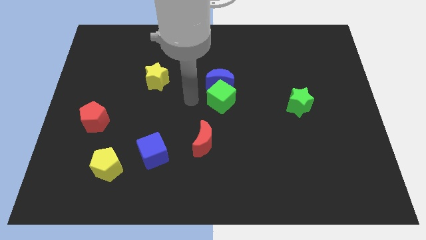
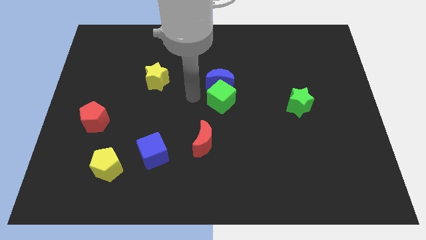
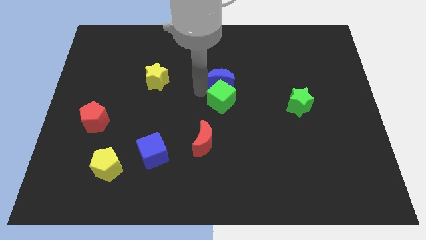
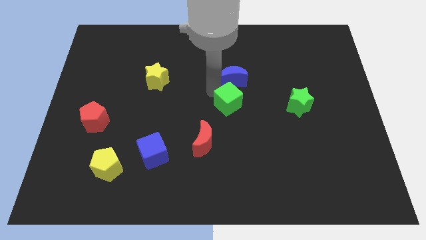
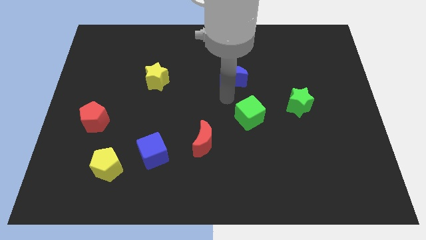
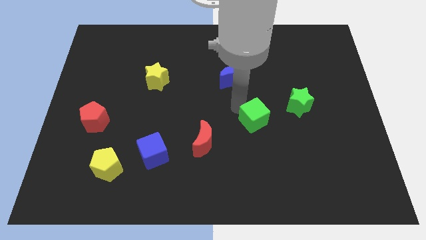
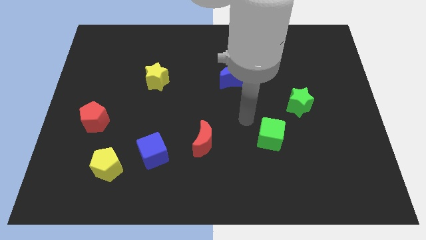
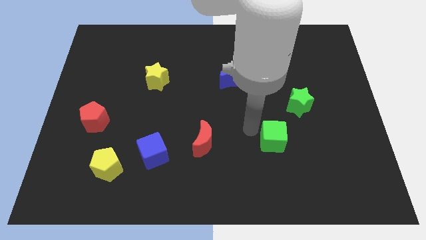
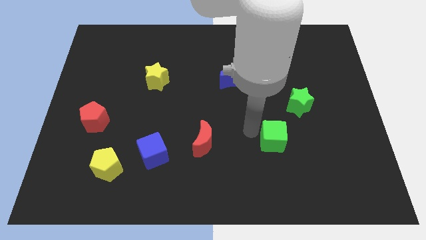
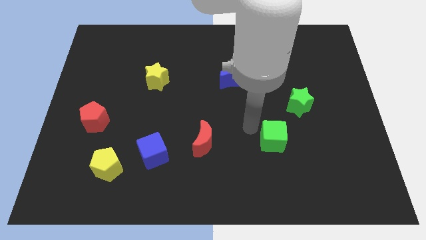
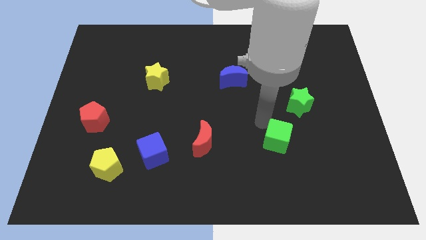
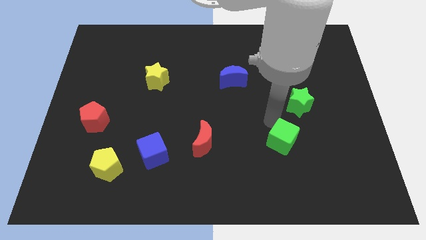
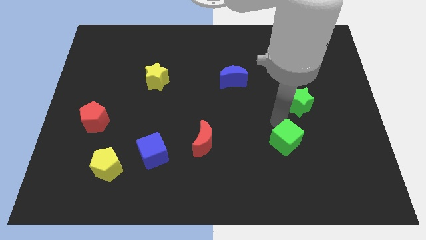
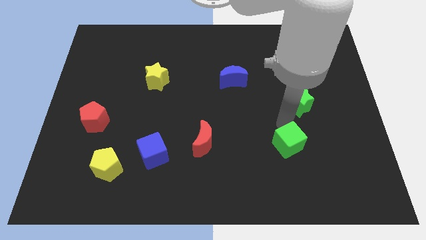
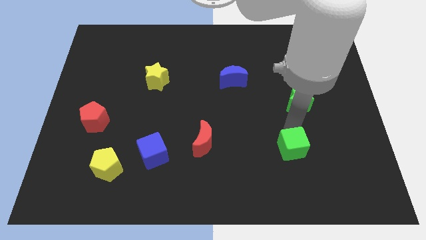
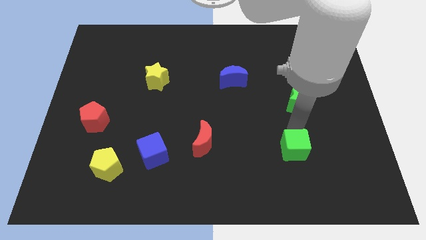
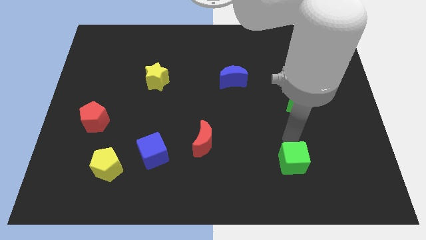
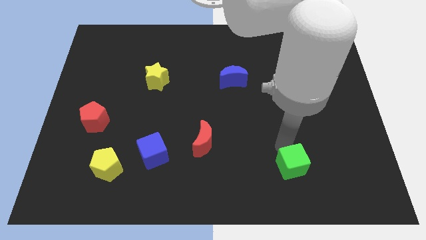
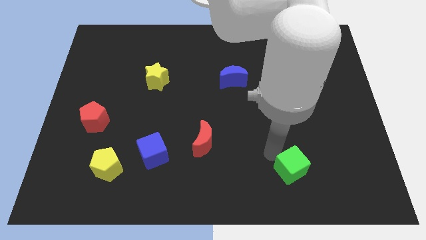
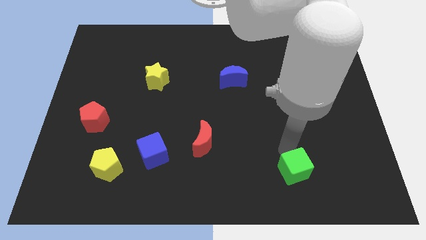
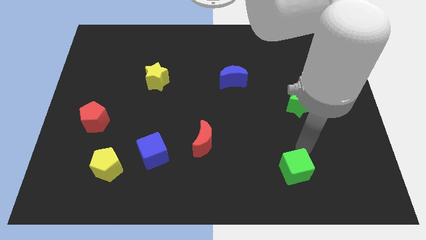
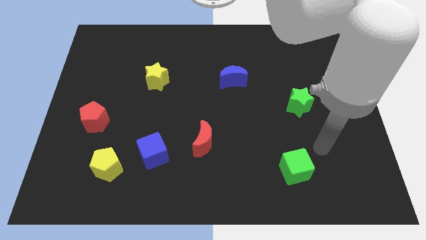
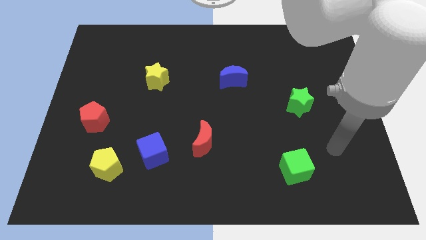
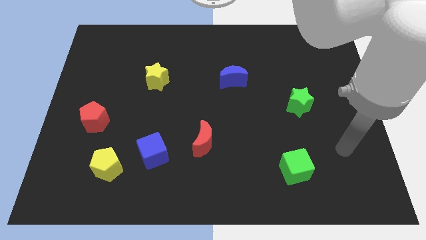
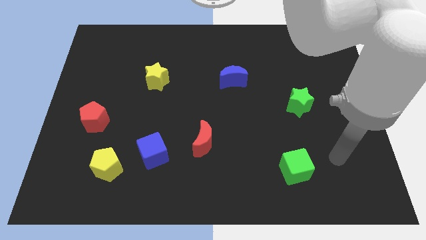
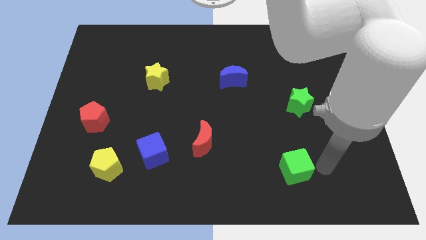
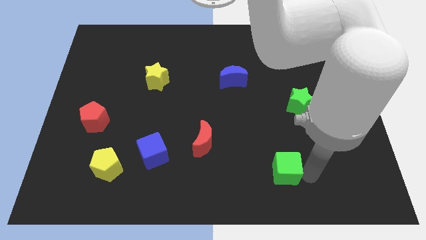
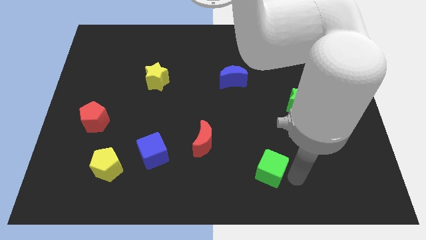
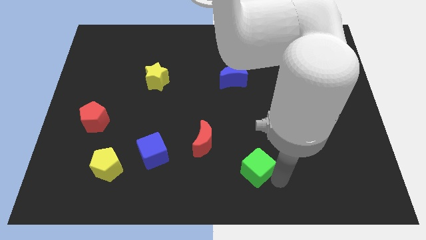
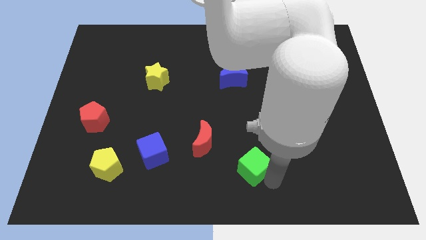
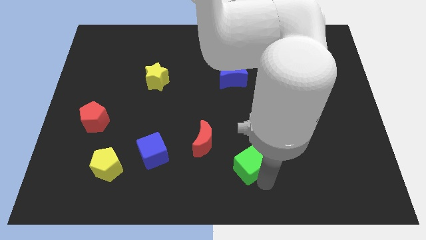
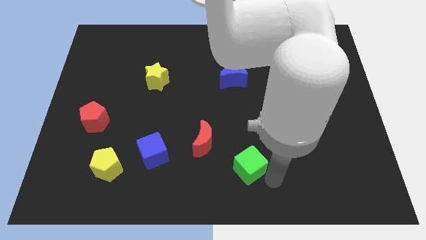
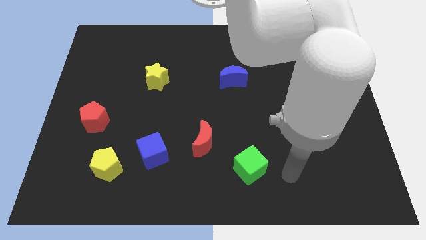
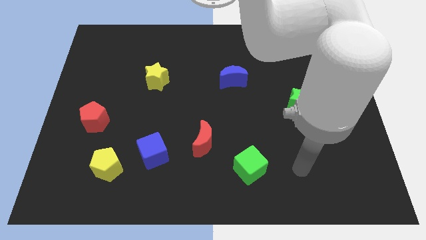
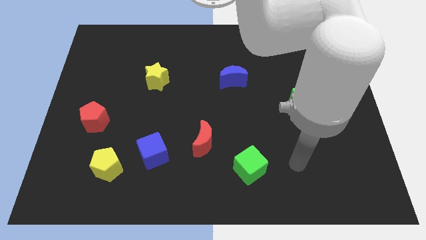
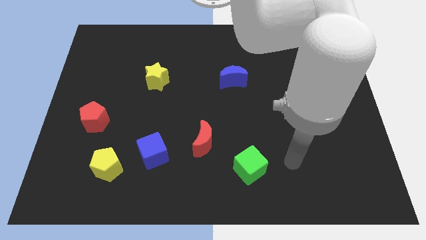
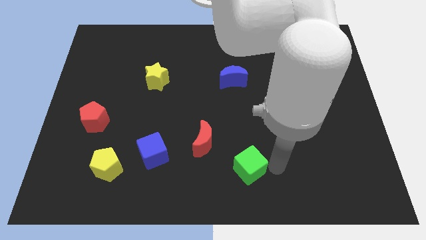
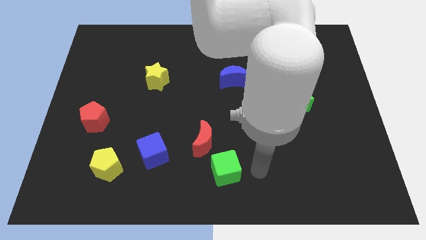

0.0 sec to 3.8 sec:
push the green cube diagonally to red moon

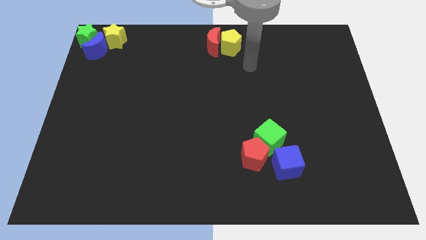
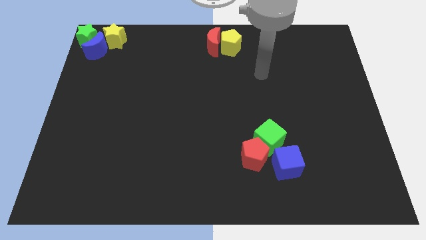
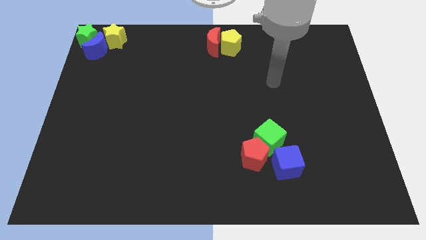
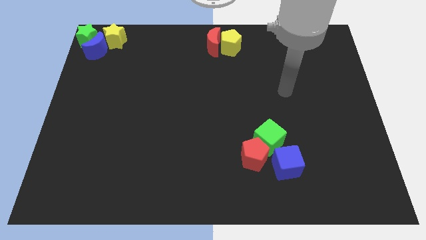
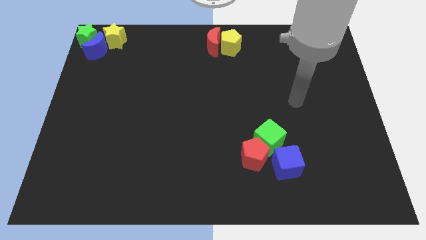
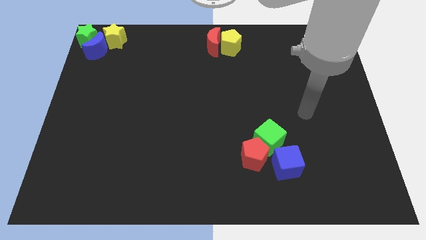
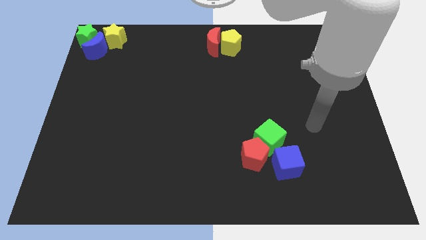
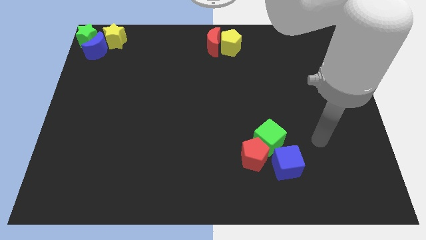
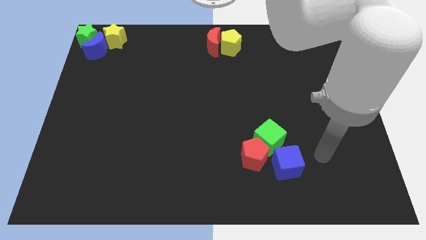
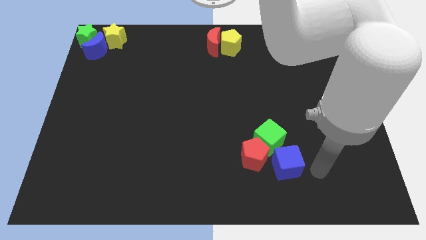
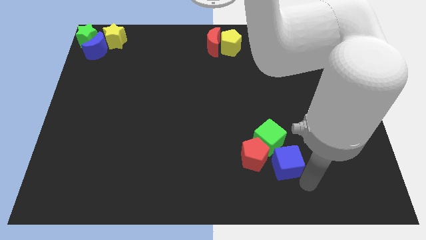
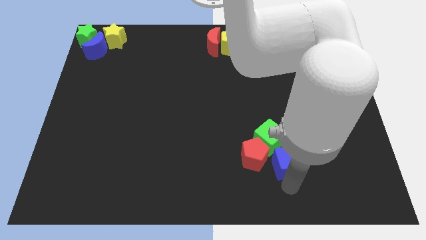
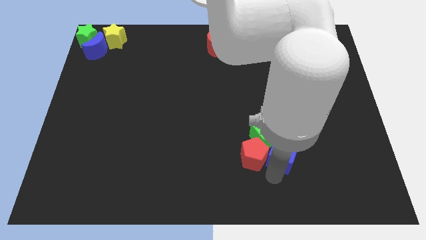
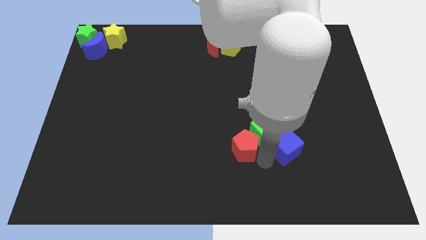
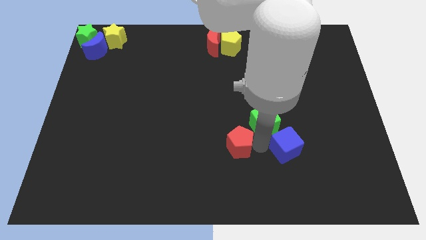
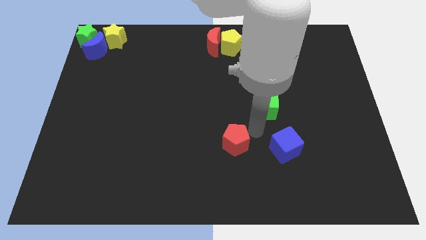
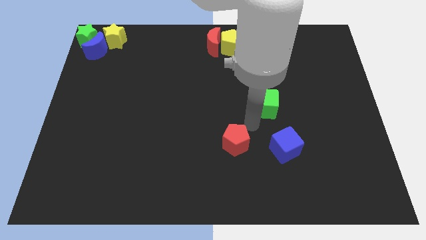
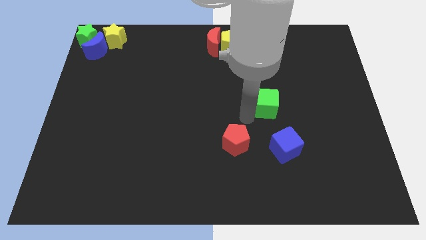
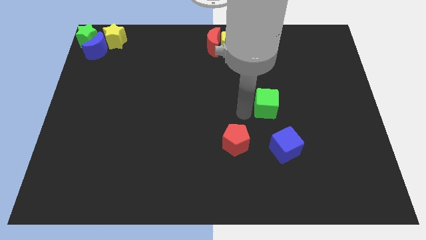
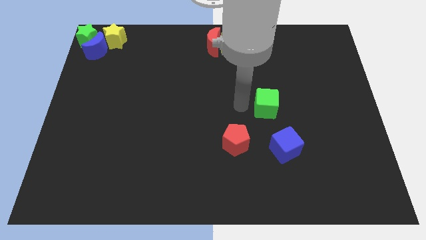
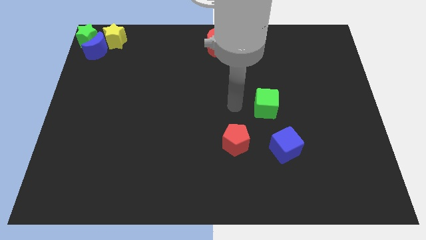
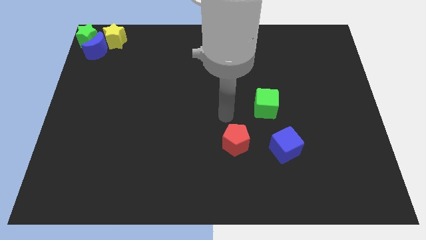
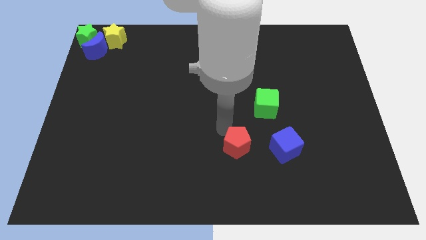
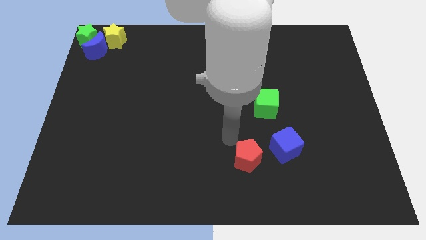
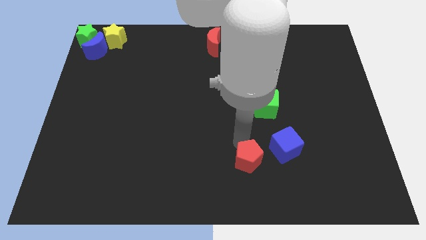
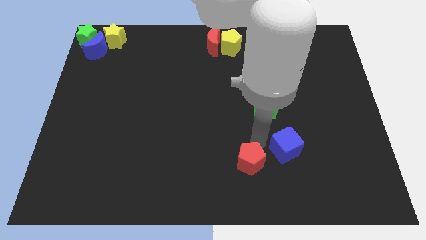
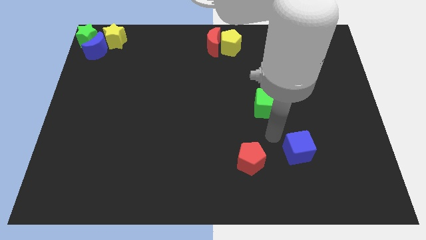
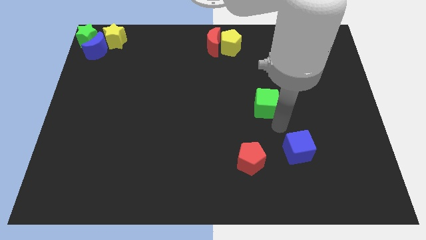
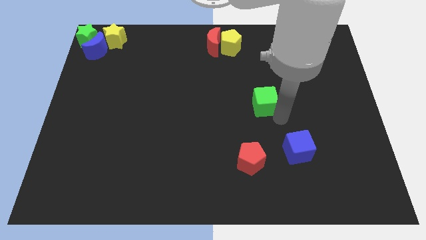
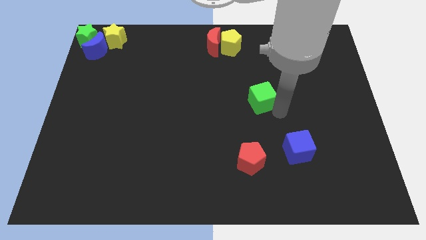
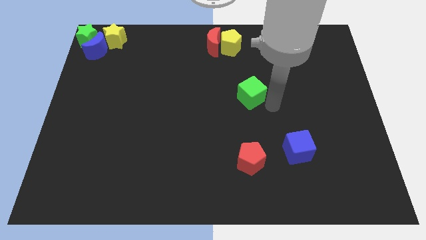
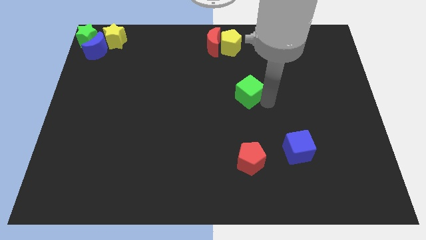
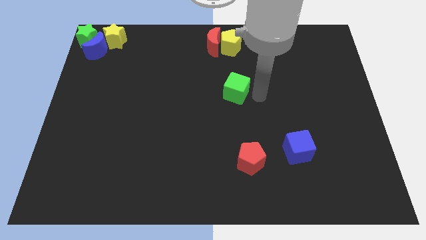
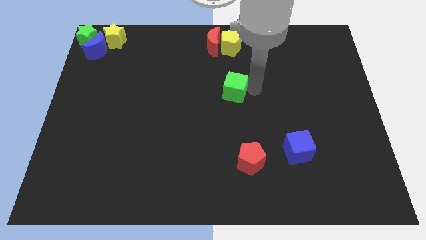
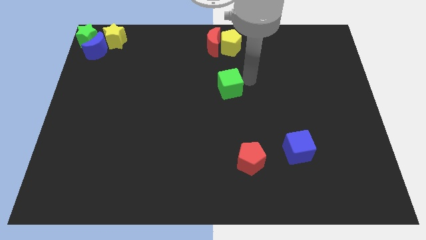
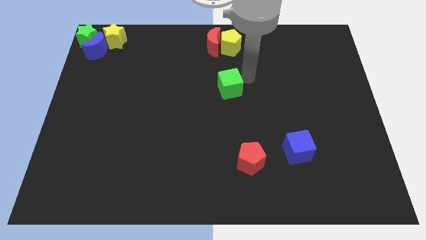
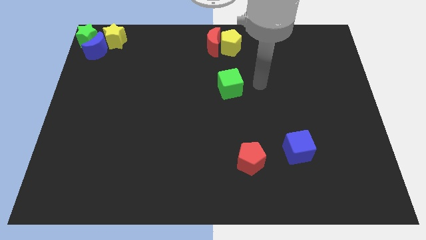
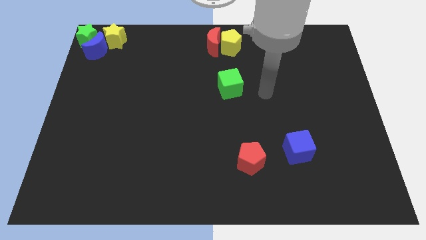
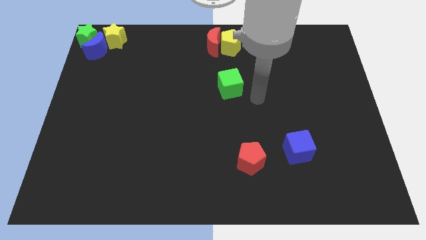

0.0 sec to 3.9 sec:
separate the group of blocks formed by green cube red pentagon and blue cube

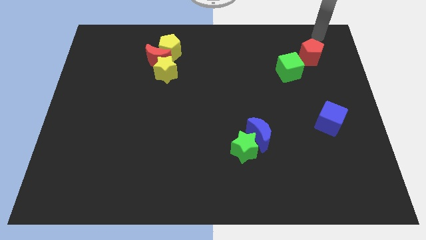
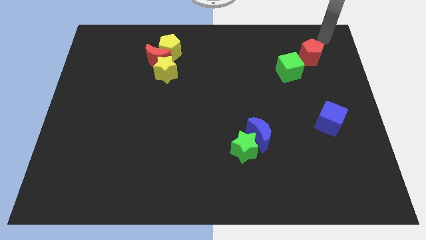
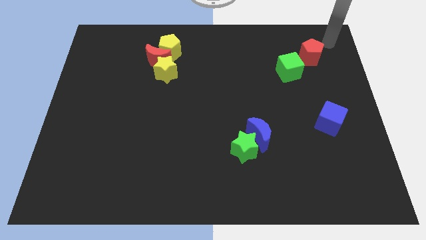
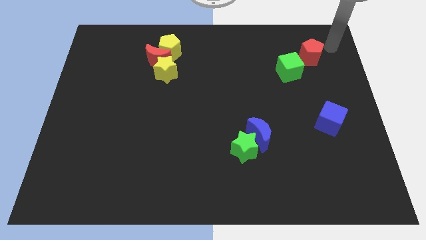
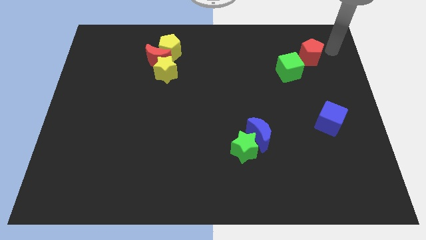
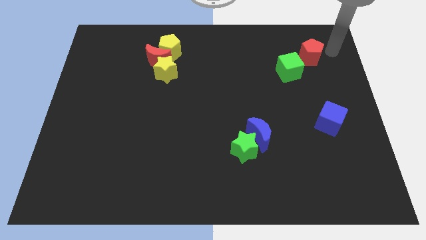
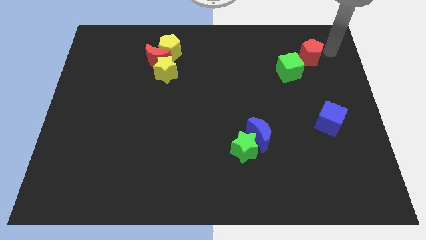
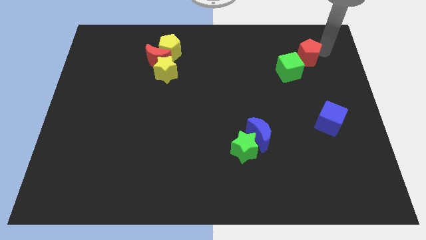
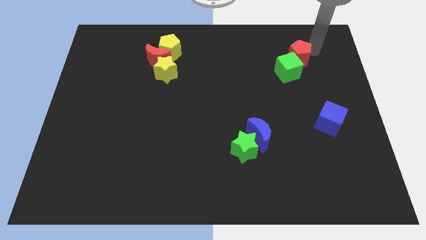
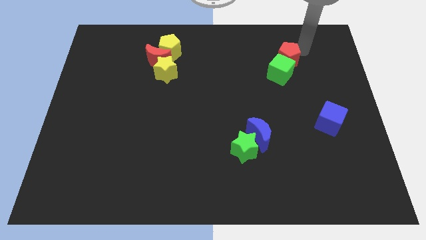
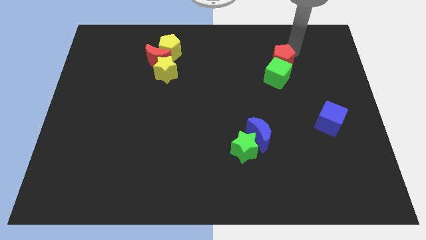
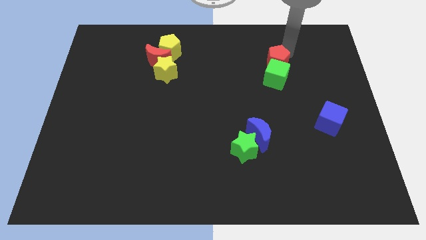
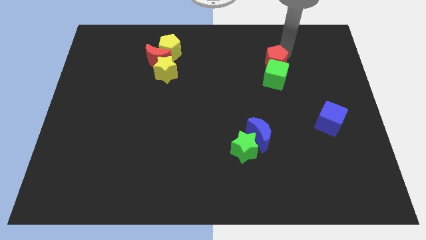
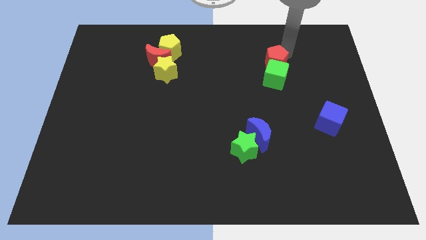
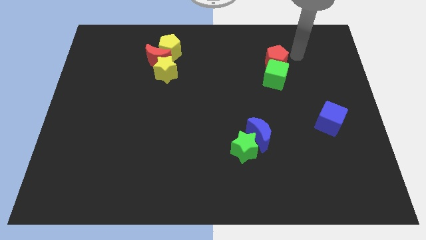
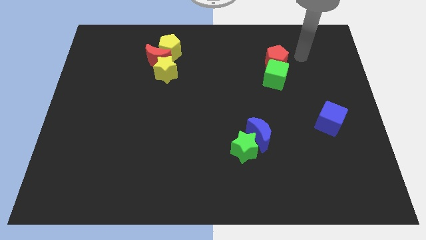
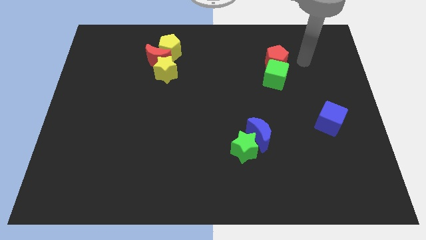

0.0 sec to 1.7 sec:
push the red pentagon and green cube towards the bottom side of the board
